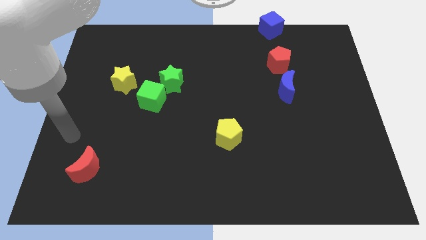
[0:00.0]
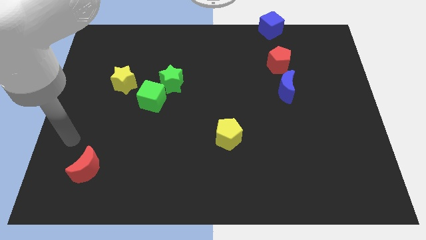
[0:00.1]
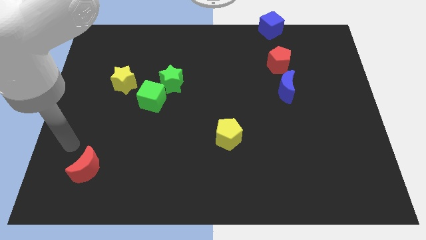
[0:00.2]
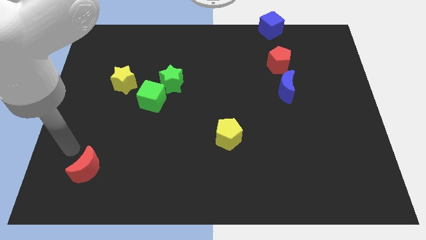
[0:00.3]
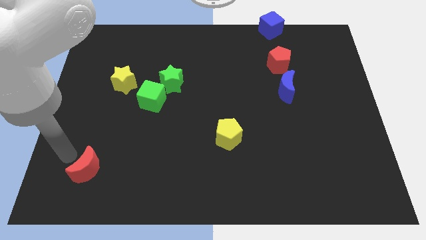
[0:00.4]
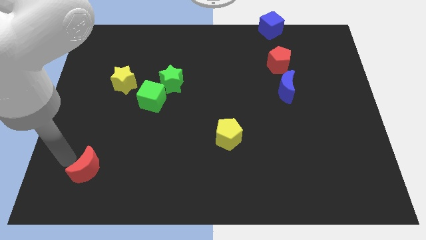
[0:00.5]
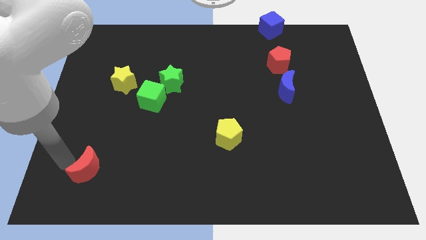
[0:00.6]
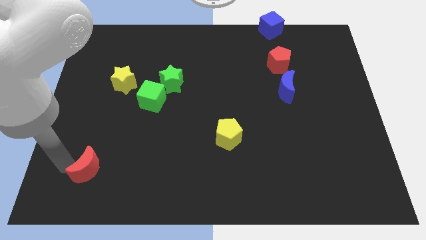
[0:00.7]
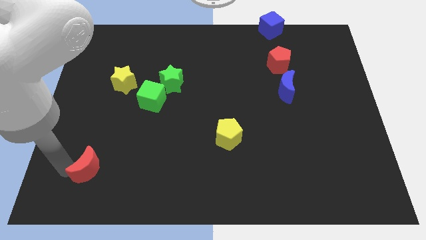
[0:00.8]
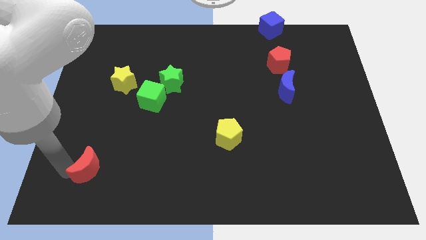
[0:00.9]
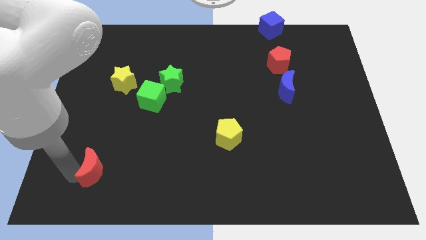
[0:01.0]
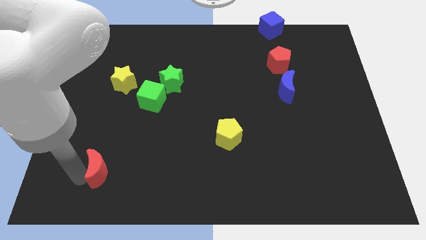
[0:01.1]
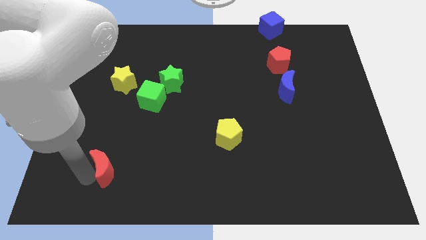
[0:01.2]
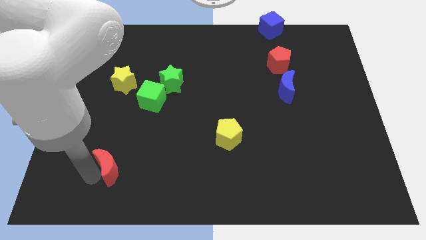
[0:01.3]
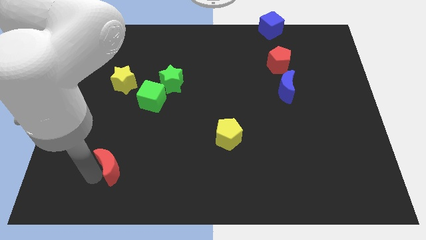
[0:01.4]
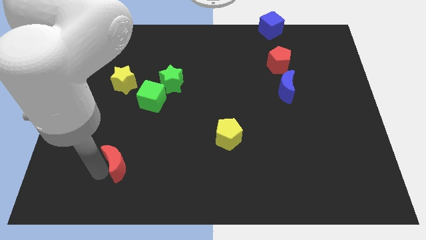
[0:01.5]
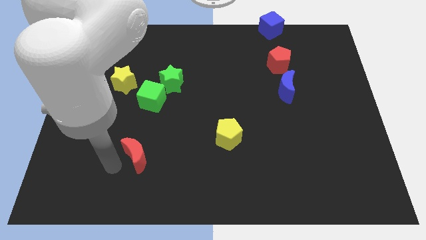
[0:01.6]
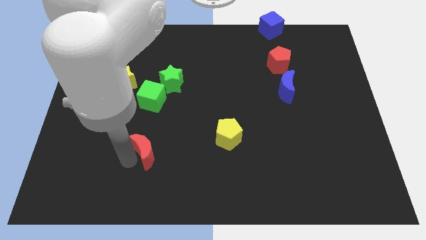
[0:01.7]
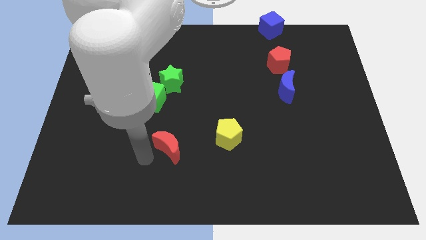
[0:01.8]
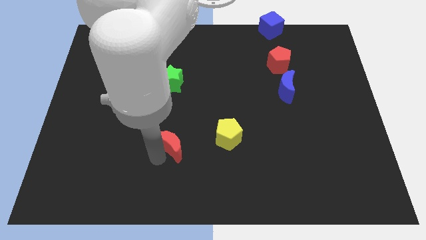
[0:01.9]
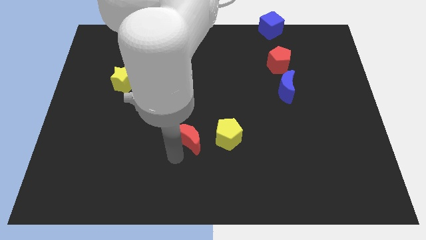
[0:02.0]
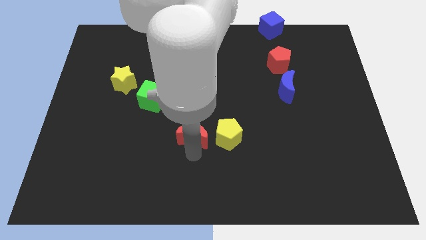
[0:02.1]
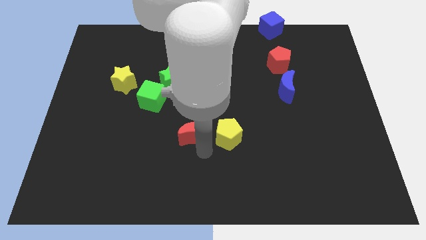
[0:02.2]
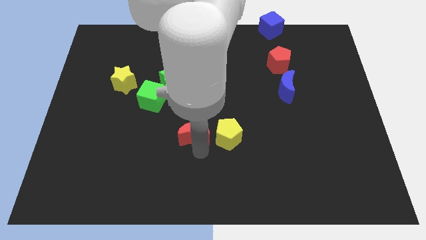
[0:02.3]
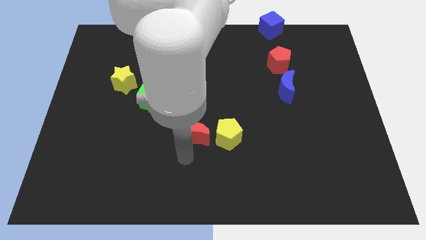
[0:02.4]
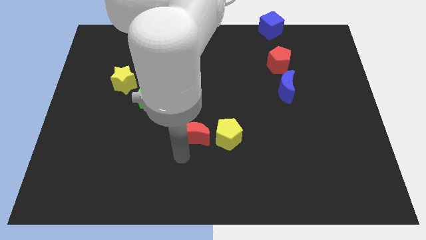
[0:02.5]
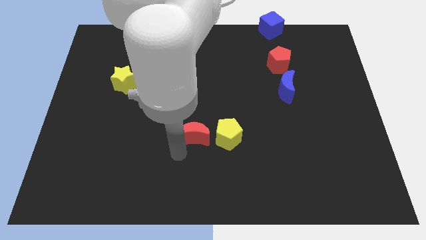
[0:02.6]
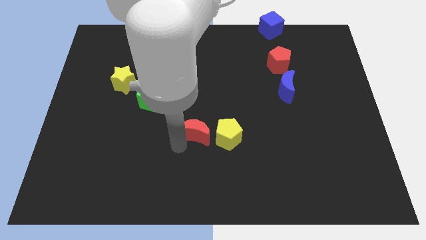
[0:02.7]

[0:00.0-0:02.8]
move red crescent left to yellow pentagon

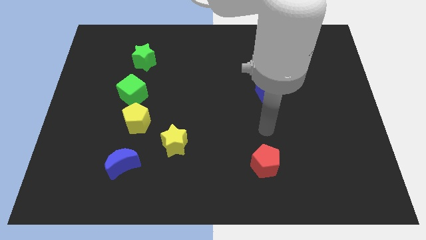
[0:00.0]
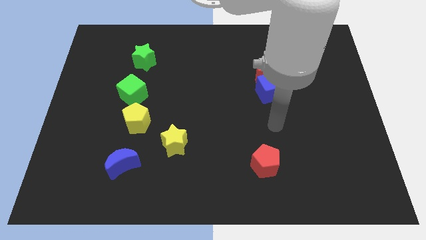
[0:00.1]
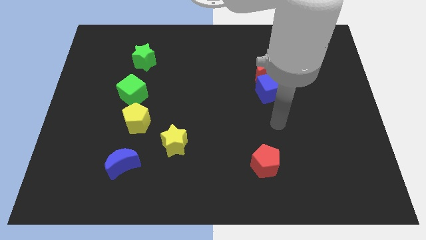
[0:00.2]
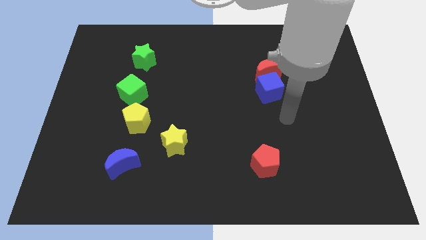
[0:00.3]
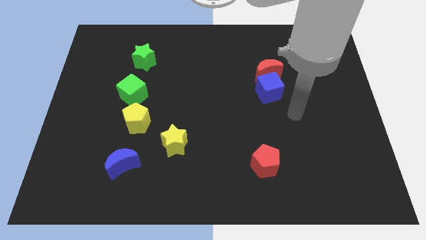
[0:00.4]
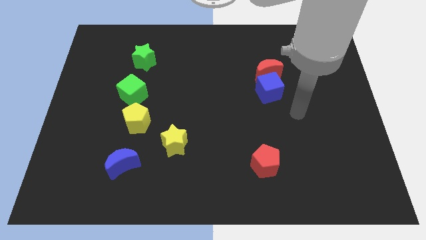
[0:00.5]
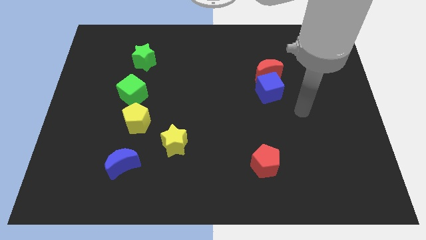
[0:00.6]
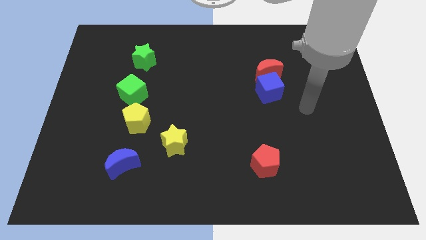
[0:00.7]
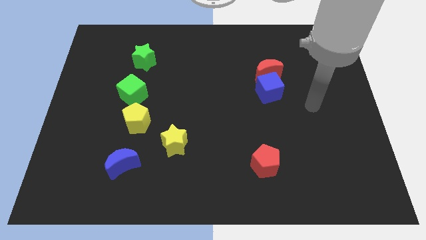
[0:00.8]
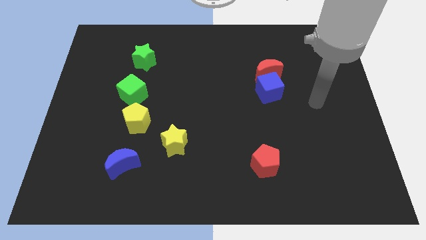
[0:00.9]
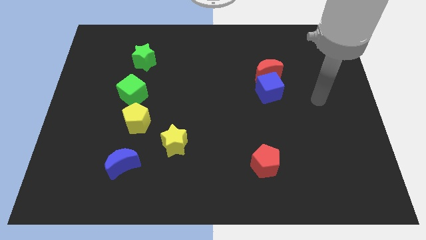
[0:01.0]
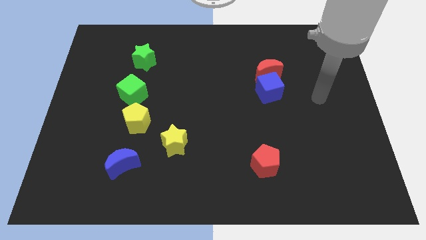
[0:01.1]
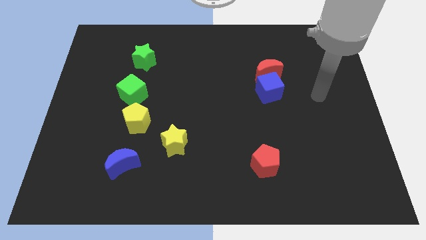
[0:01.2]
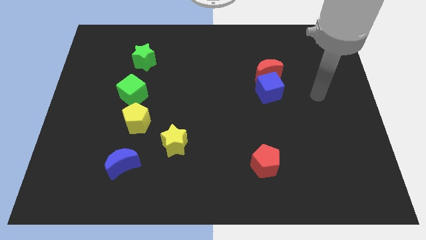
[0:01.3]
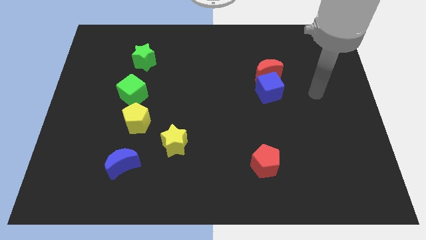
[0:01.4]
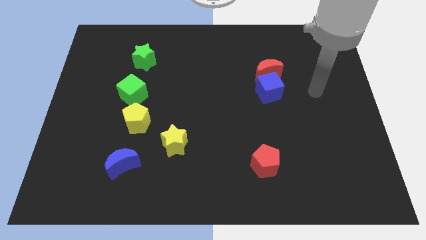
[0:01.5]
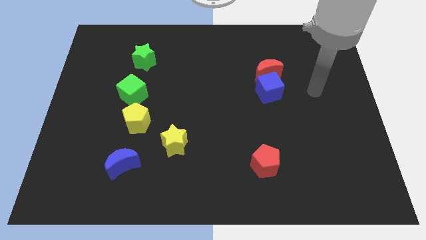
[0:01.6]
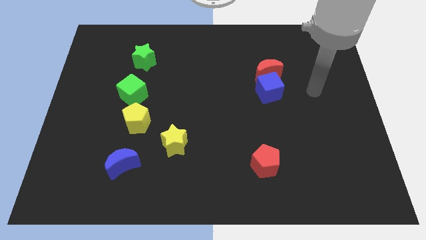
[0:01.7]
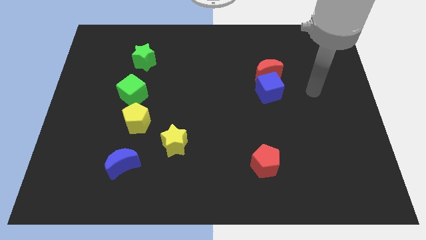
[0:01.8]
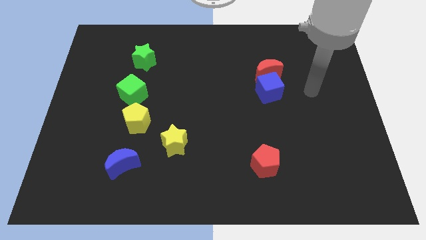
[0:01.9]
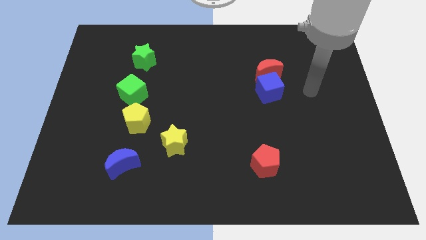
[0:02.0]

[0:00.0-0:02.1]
move your arm on the right side of the blue cube

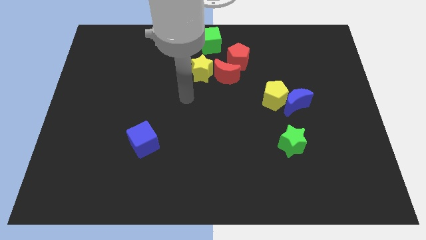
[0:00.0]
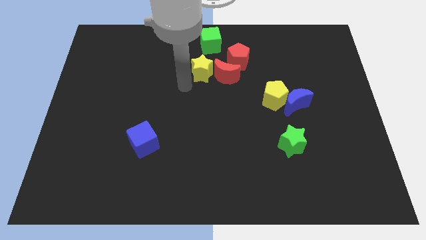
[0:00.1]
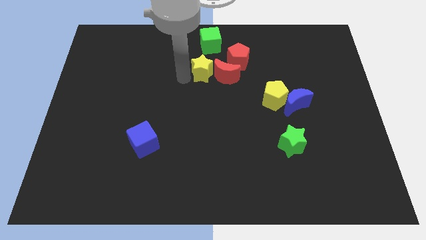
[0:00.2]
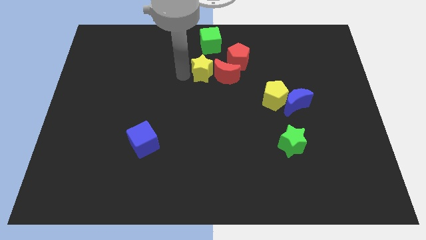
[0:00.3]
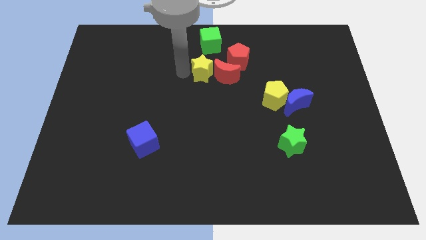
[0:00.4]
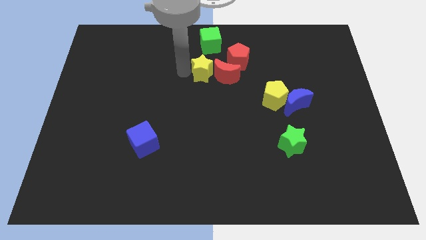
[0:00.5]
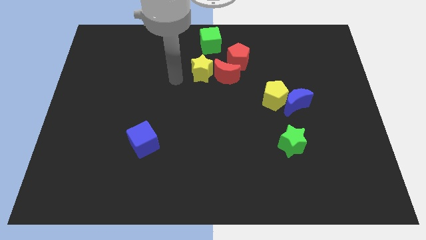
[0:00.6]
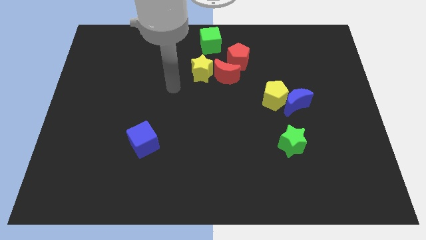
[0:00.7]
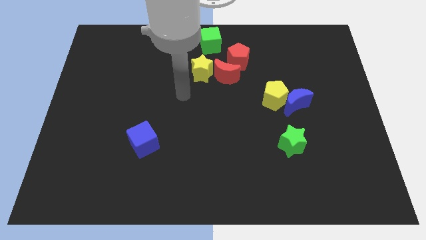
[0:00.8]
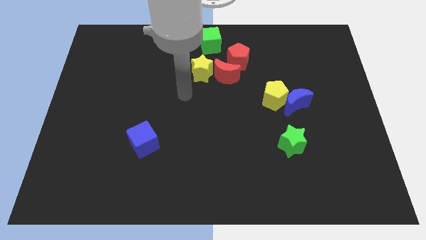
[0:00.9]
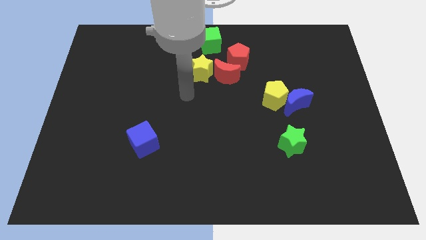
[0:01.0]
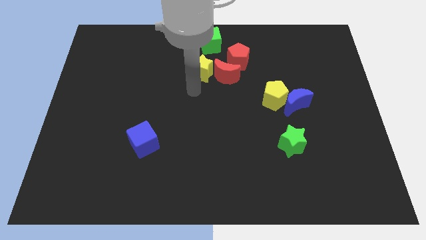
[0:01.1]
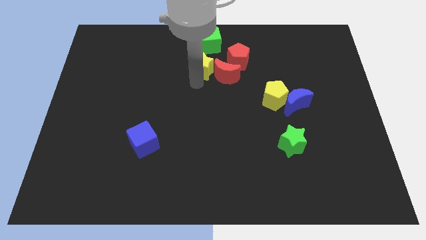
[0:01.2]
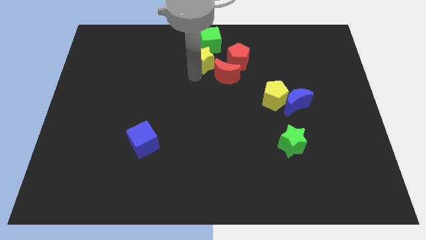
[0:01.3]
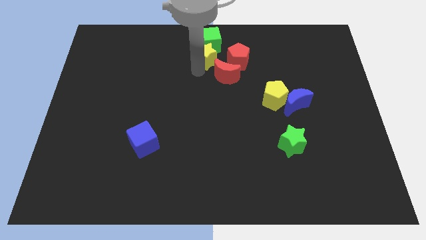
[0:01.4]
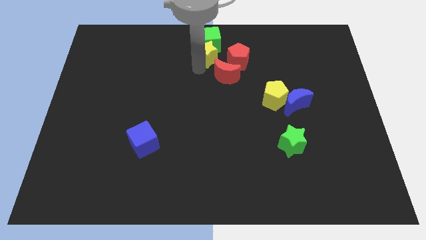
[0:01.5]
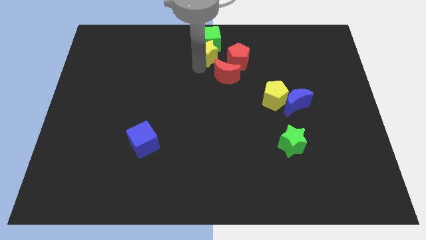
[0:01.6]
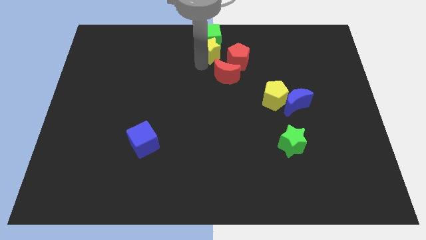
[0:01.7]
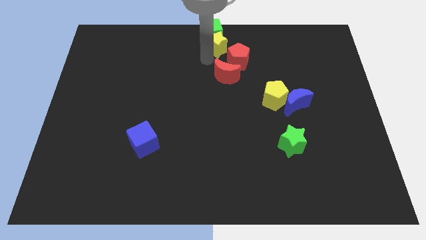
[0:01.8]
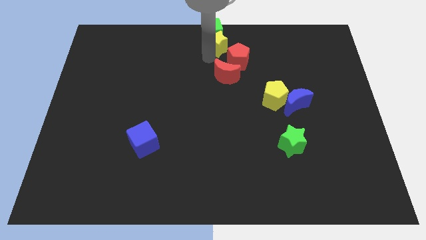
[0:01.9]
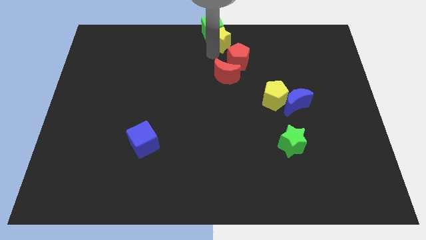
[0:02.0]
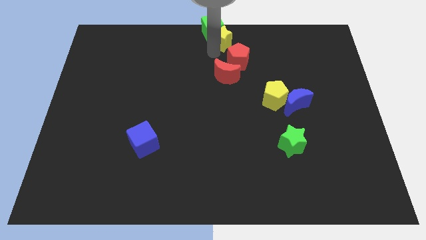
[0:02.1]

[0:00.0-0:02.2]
move the yellow star into the green cube

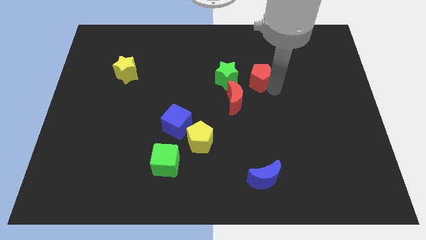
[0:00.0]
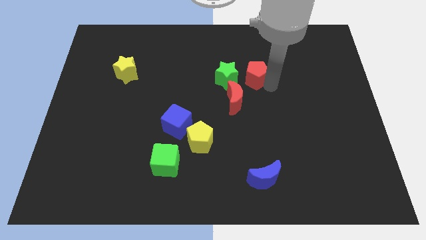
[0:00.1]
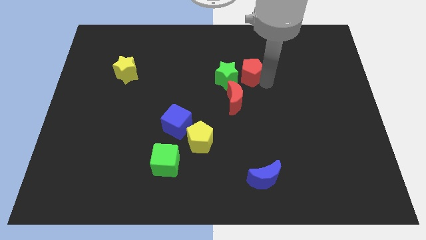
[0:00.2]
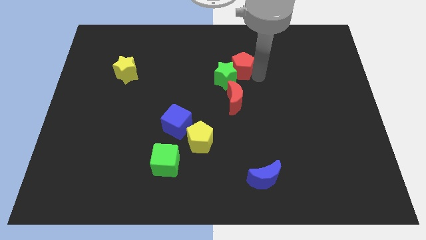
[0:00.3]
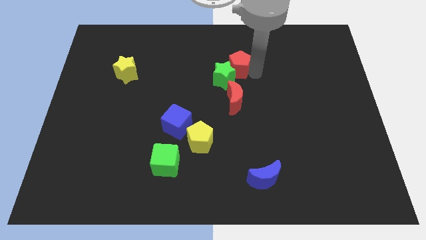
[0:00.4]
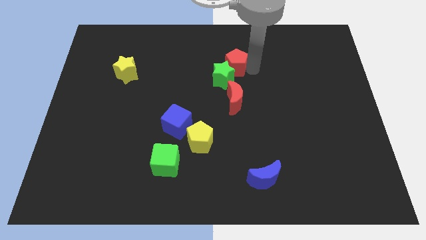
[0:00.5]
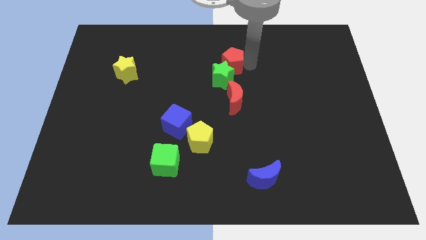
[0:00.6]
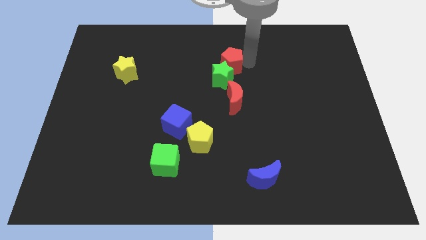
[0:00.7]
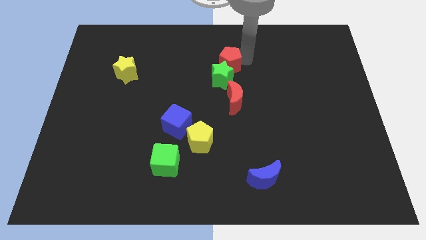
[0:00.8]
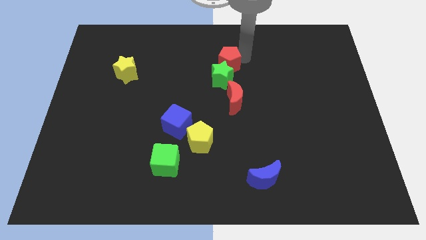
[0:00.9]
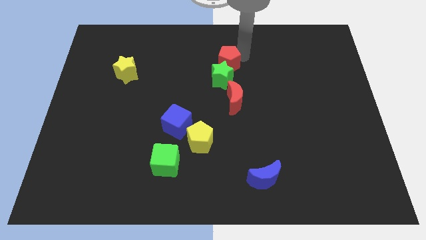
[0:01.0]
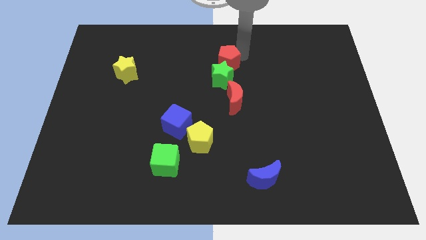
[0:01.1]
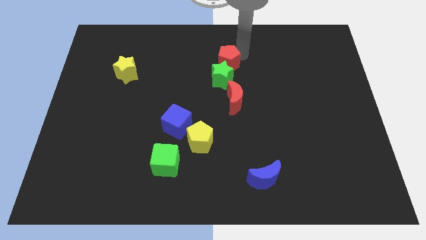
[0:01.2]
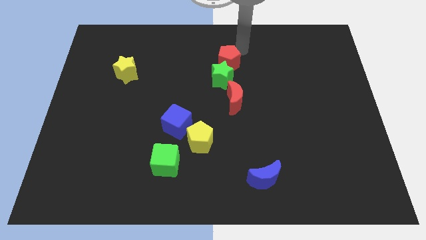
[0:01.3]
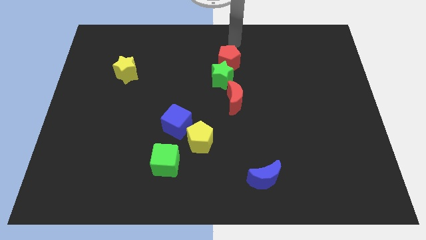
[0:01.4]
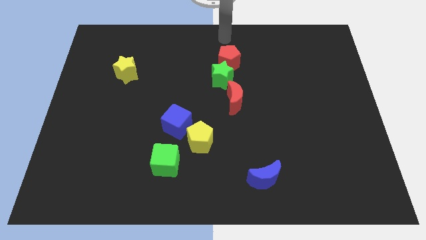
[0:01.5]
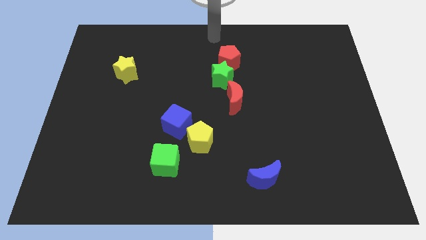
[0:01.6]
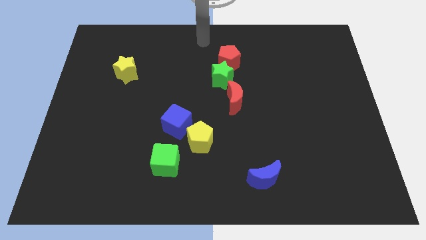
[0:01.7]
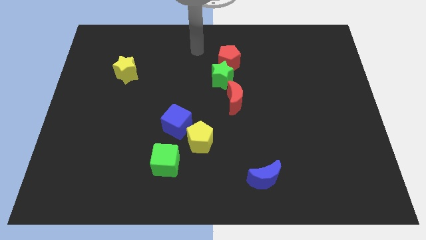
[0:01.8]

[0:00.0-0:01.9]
drag red pentagon to the top of green star
